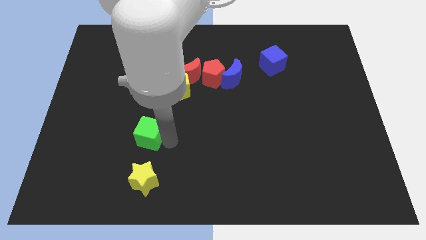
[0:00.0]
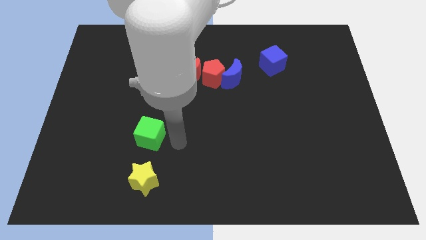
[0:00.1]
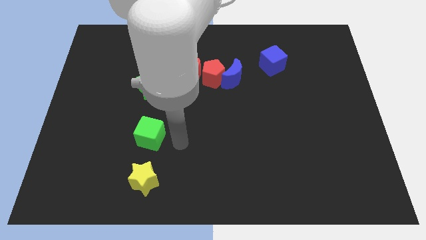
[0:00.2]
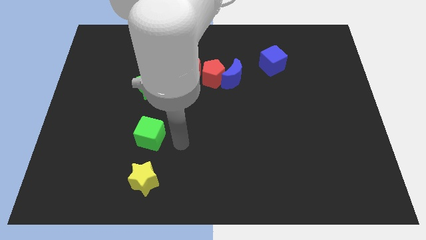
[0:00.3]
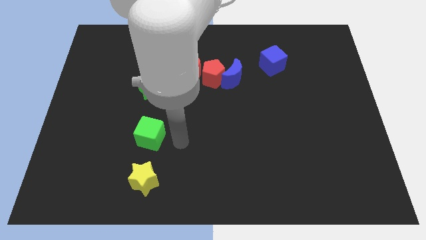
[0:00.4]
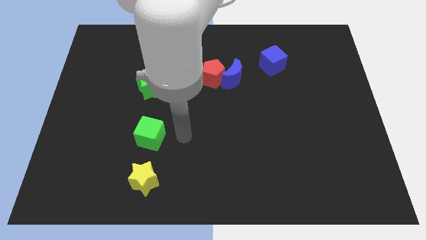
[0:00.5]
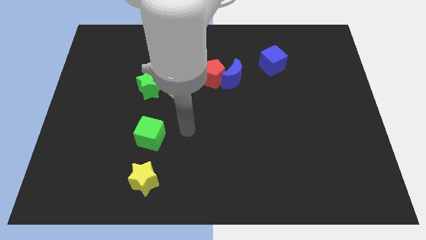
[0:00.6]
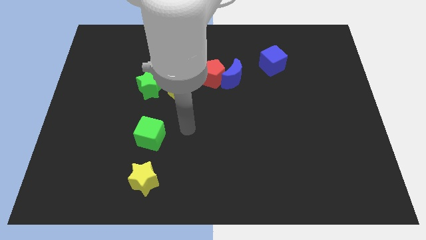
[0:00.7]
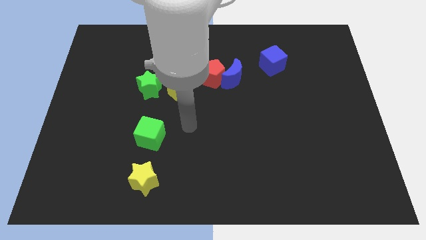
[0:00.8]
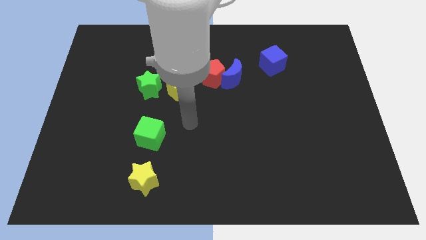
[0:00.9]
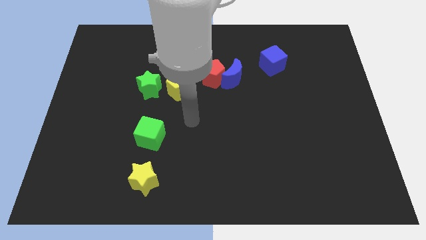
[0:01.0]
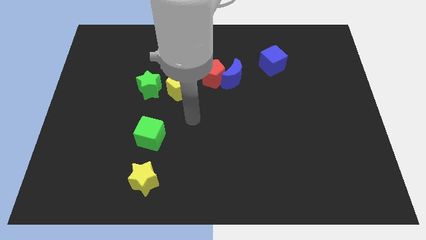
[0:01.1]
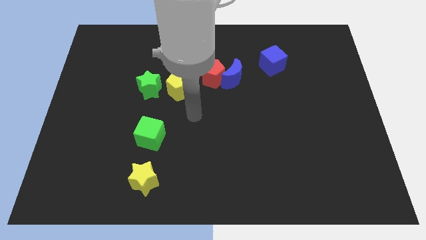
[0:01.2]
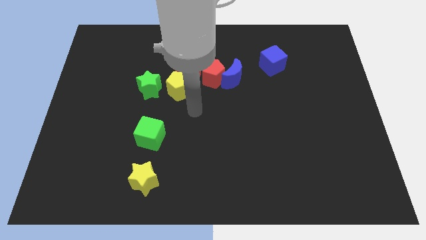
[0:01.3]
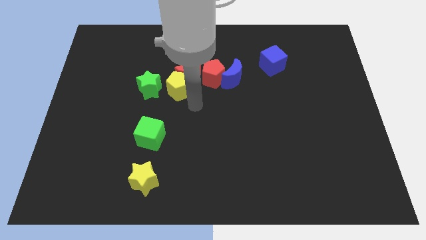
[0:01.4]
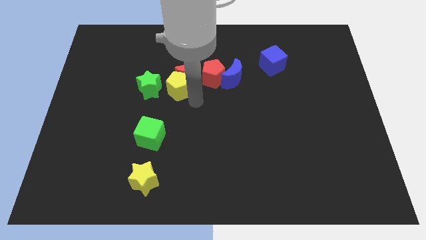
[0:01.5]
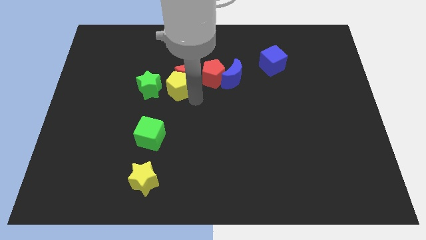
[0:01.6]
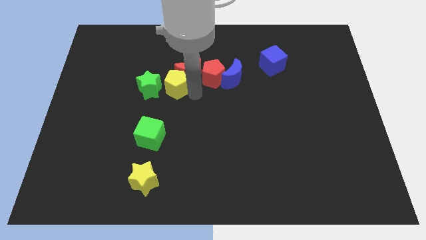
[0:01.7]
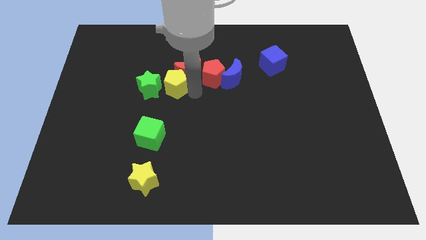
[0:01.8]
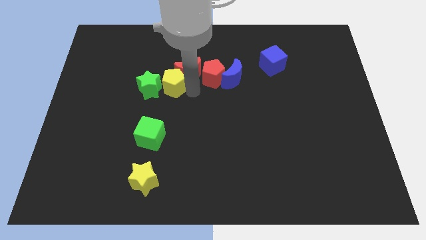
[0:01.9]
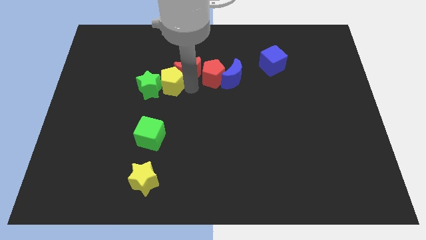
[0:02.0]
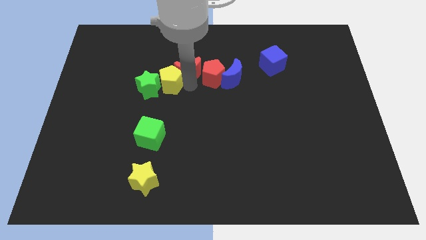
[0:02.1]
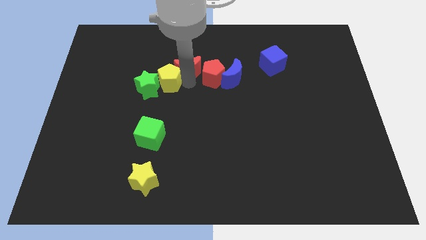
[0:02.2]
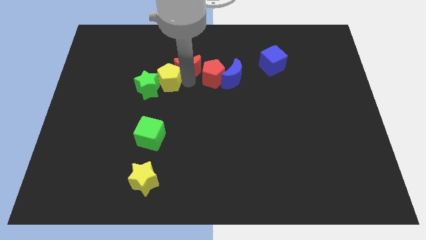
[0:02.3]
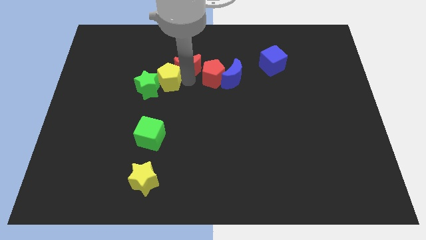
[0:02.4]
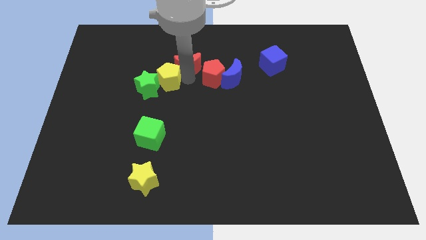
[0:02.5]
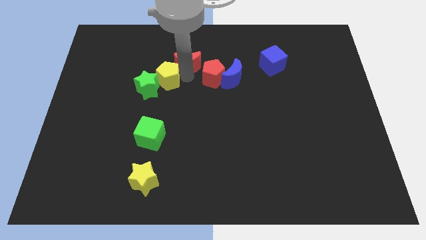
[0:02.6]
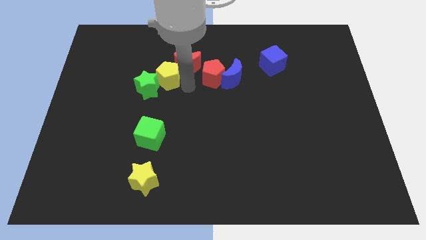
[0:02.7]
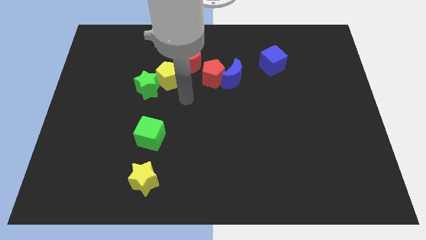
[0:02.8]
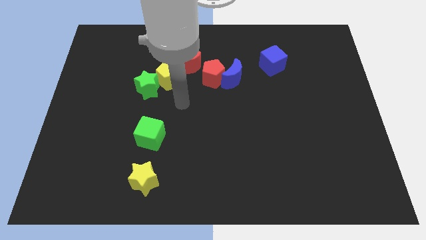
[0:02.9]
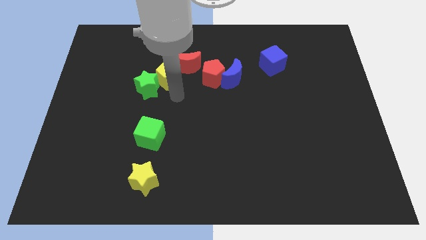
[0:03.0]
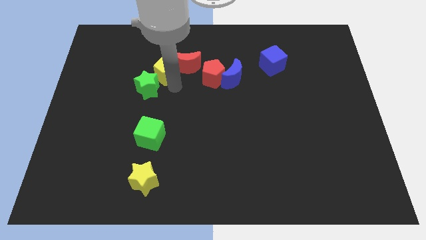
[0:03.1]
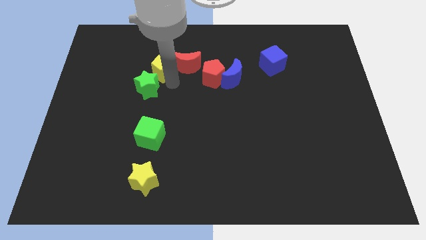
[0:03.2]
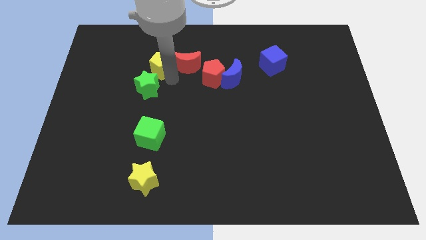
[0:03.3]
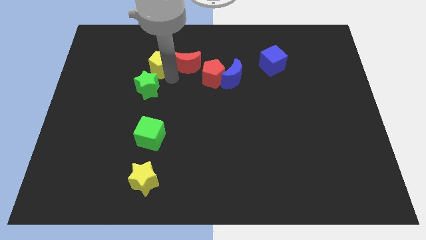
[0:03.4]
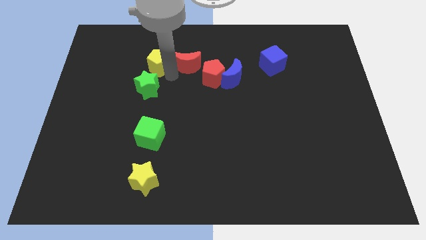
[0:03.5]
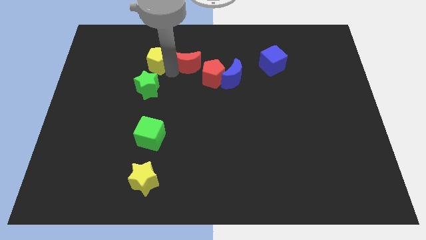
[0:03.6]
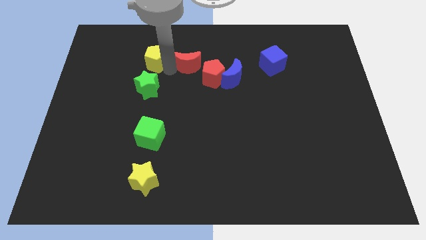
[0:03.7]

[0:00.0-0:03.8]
push the yellow pentagon to the top of the green star

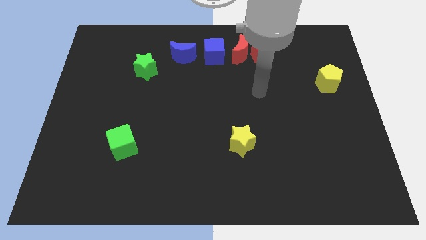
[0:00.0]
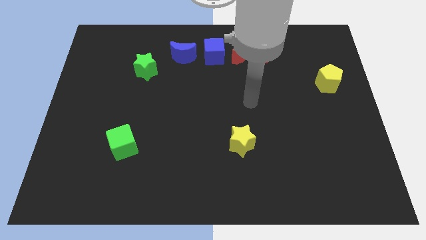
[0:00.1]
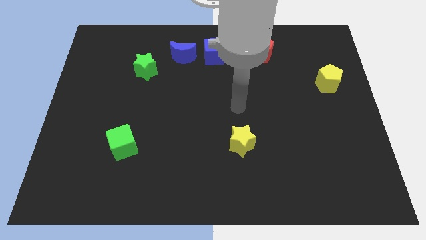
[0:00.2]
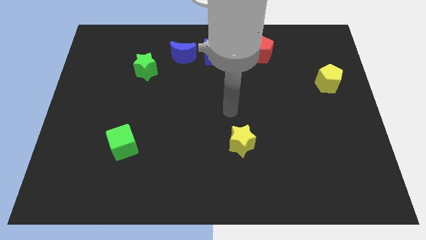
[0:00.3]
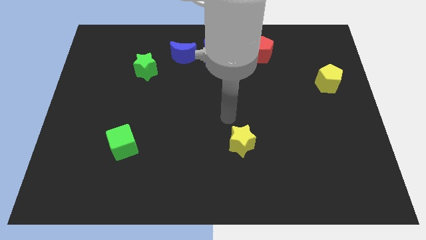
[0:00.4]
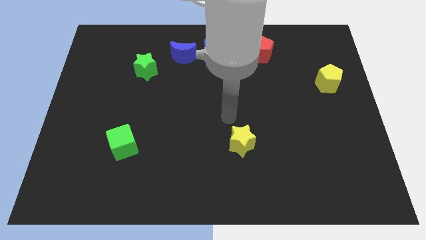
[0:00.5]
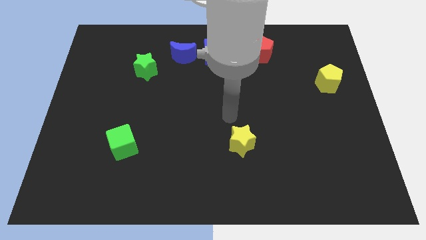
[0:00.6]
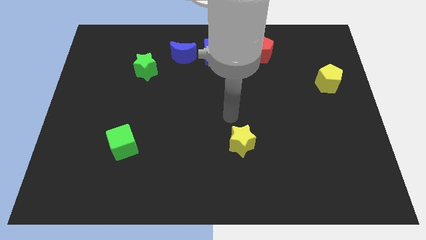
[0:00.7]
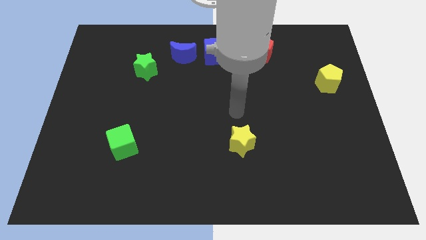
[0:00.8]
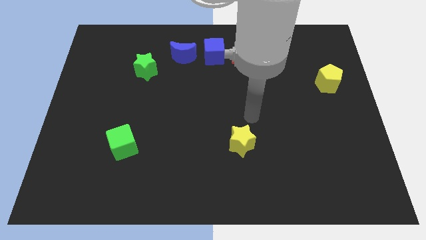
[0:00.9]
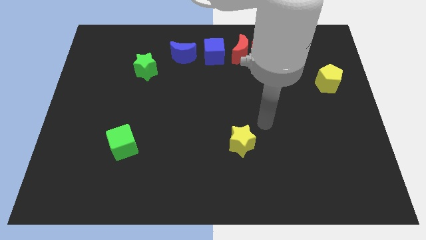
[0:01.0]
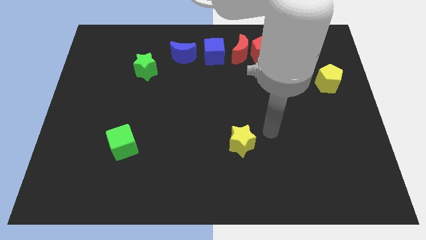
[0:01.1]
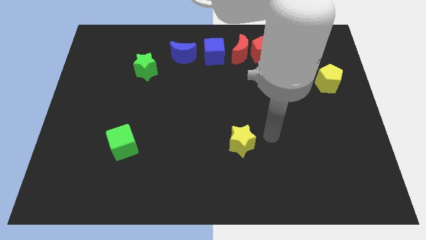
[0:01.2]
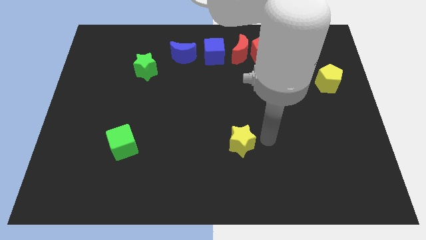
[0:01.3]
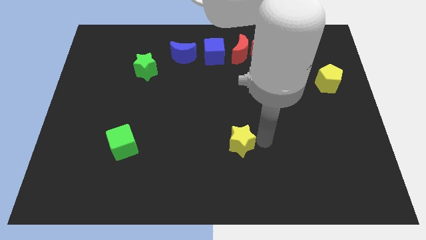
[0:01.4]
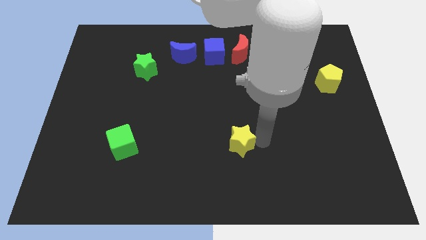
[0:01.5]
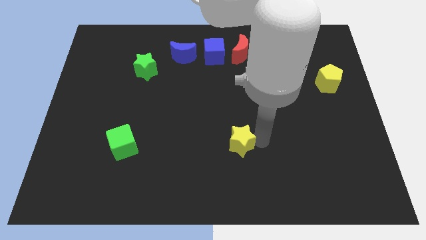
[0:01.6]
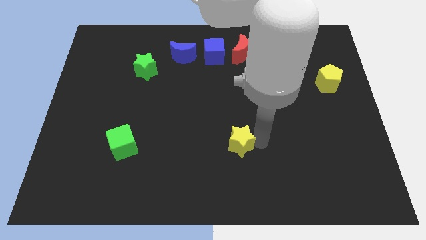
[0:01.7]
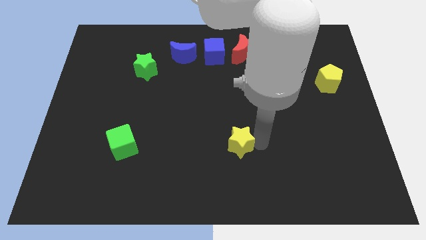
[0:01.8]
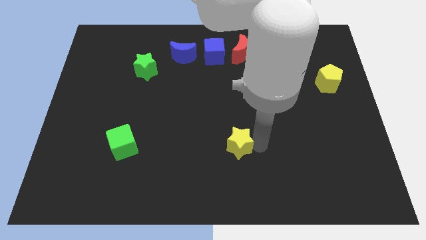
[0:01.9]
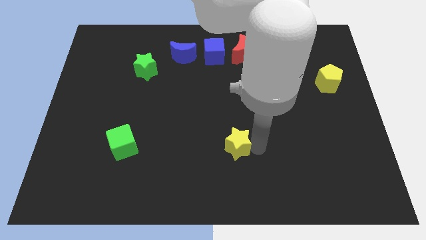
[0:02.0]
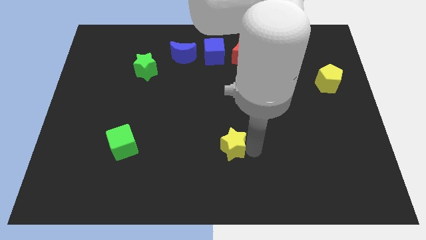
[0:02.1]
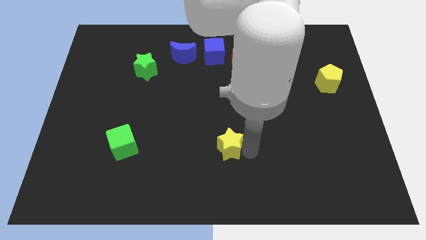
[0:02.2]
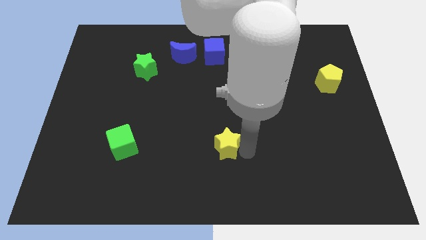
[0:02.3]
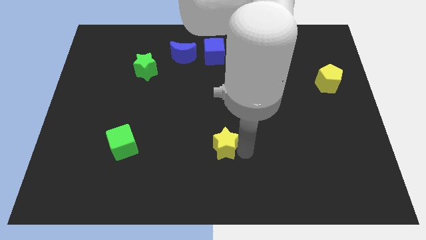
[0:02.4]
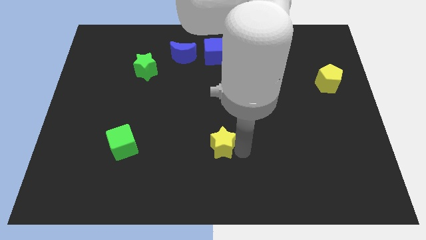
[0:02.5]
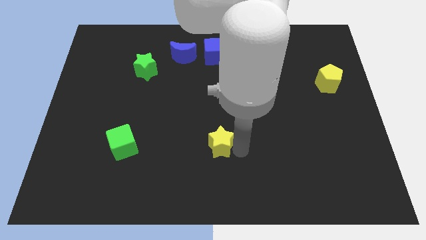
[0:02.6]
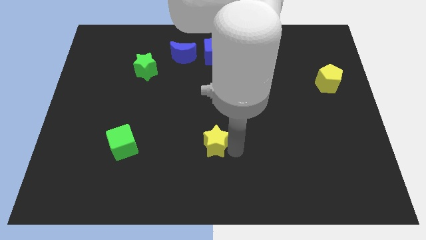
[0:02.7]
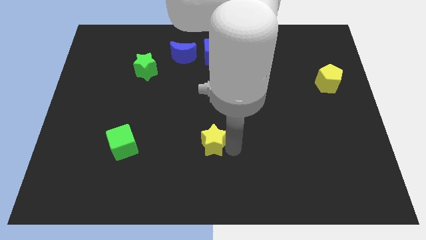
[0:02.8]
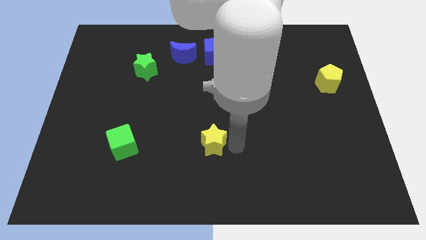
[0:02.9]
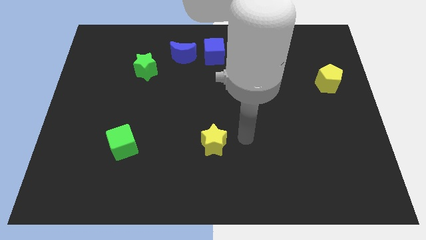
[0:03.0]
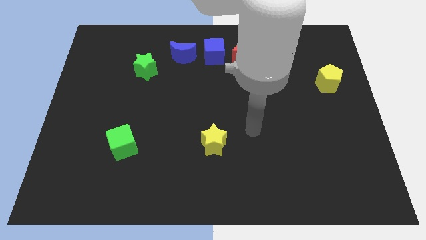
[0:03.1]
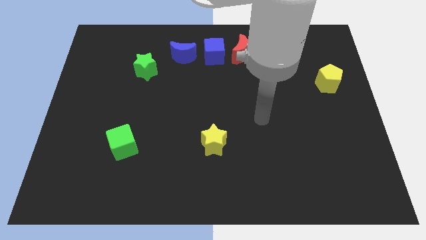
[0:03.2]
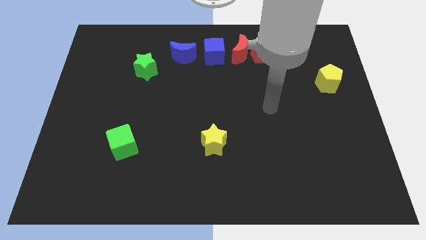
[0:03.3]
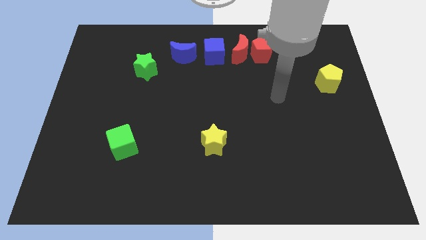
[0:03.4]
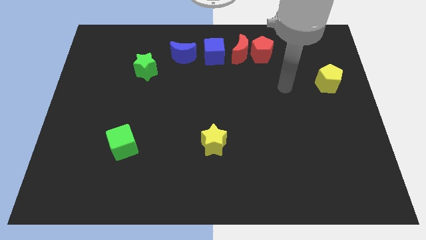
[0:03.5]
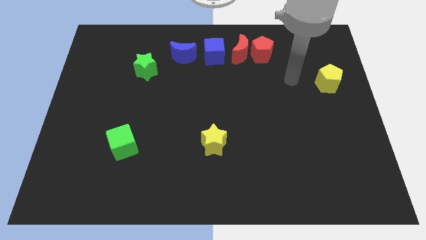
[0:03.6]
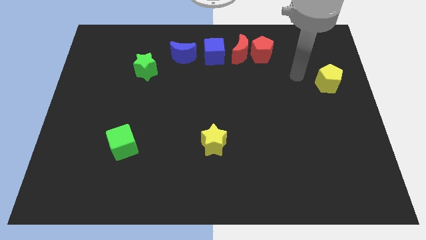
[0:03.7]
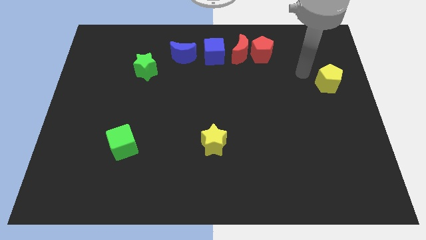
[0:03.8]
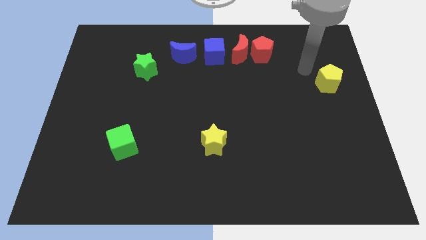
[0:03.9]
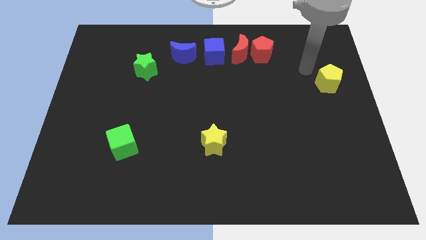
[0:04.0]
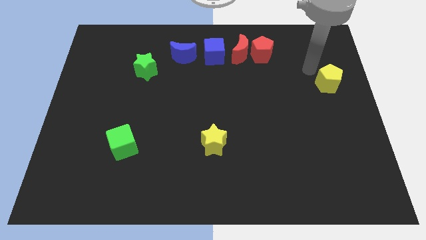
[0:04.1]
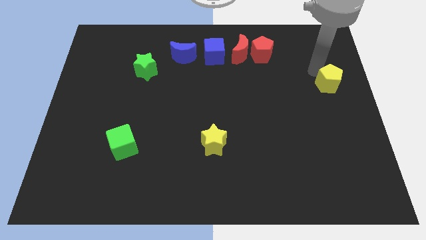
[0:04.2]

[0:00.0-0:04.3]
push the yellow star to the left of the board

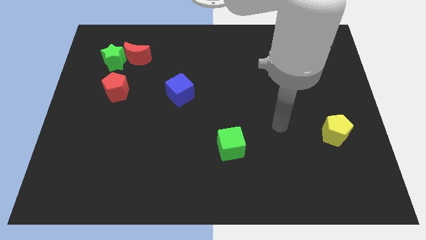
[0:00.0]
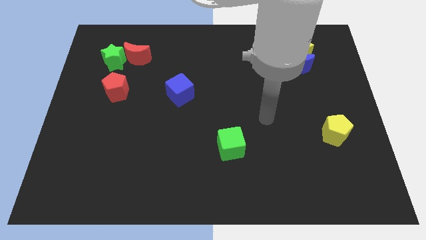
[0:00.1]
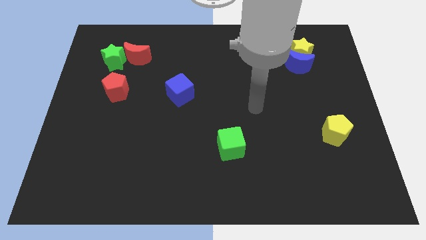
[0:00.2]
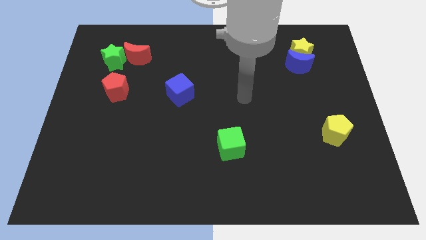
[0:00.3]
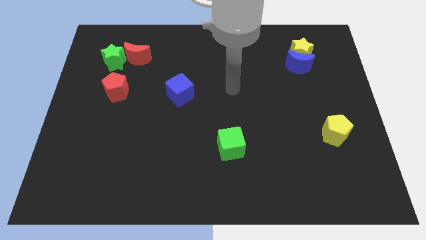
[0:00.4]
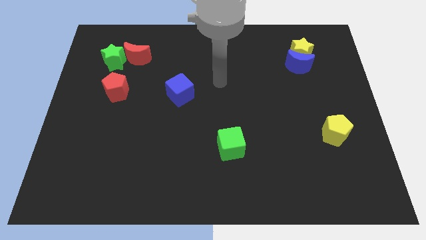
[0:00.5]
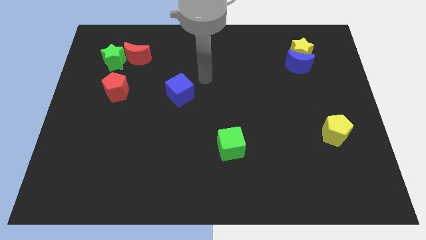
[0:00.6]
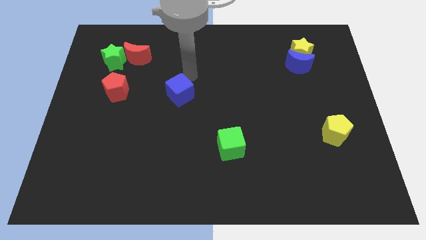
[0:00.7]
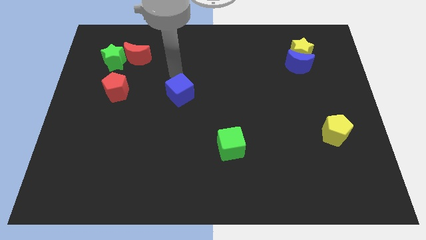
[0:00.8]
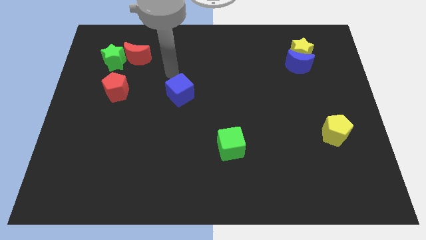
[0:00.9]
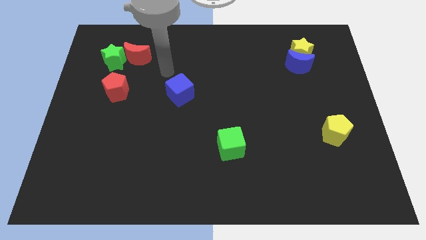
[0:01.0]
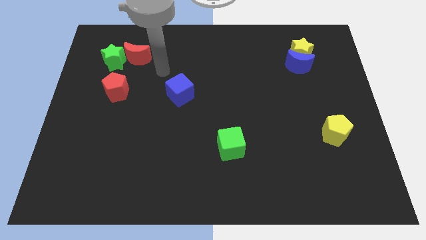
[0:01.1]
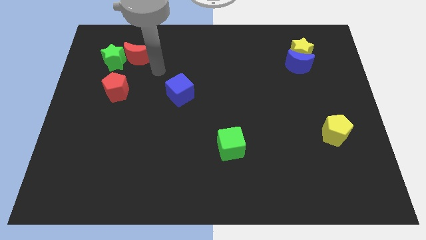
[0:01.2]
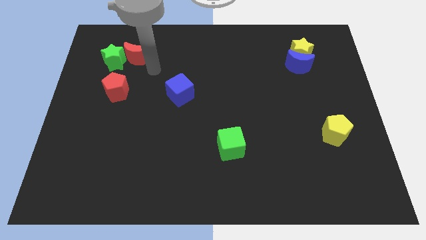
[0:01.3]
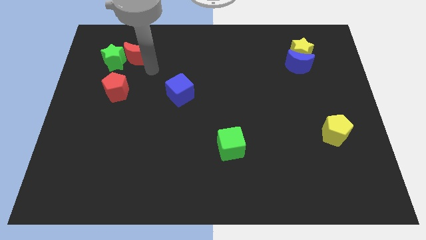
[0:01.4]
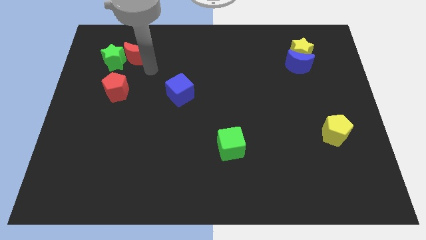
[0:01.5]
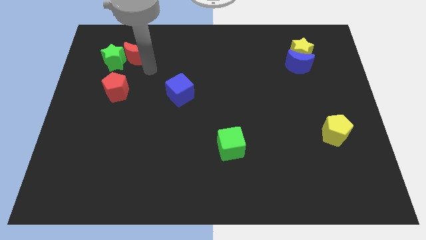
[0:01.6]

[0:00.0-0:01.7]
place your hand below the red crescent
